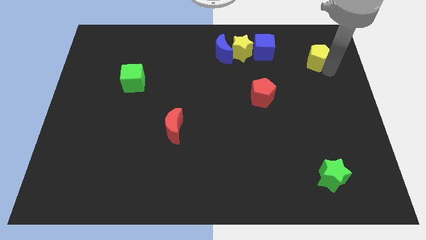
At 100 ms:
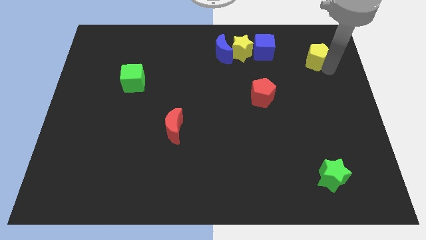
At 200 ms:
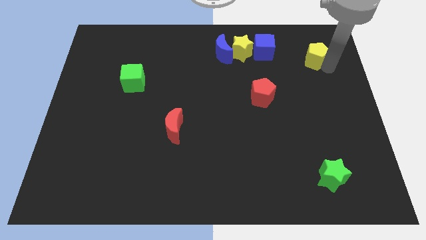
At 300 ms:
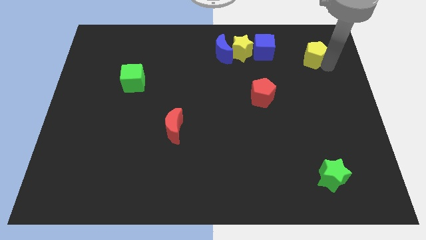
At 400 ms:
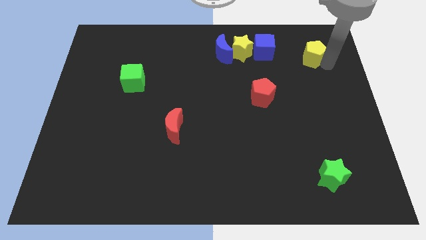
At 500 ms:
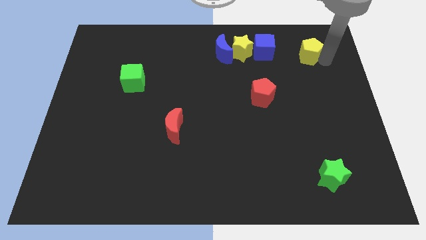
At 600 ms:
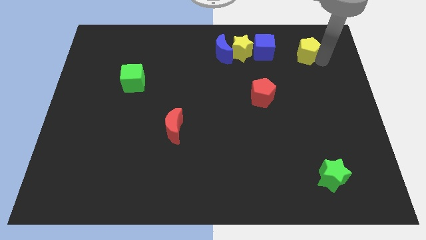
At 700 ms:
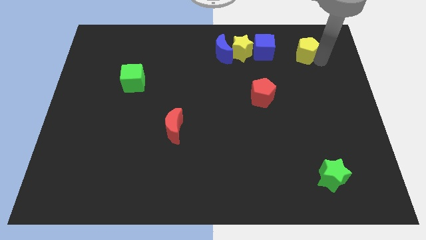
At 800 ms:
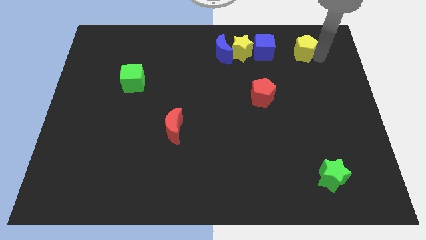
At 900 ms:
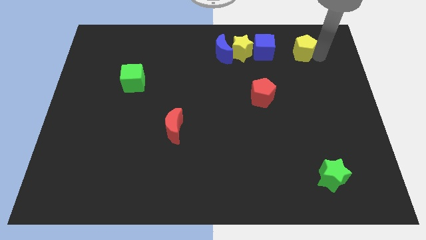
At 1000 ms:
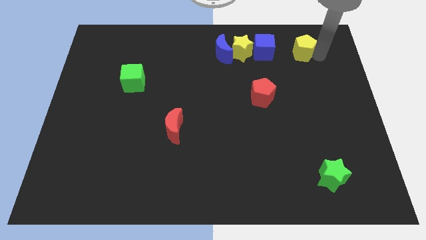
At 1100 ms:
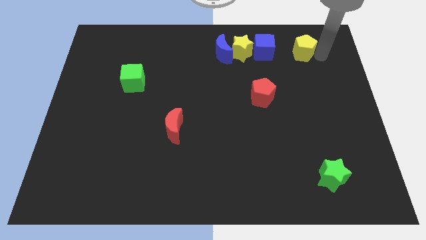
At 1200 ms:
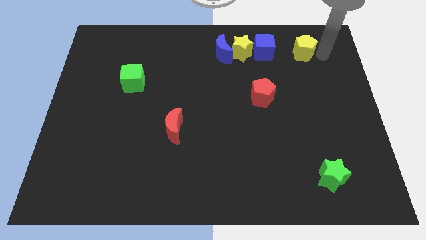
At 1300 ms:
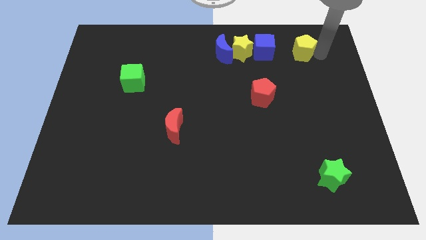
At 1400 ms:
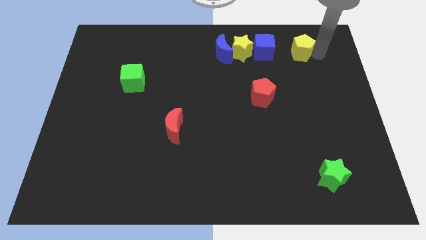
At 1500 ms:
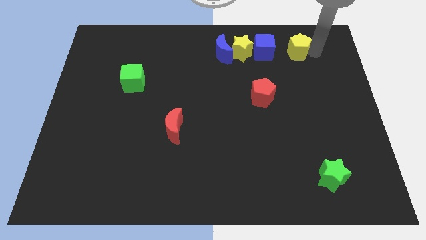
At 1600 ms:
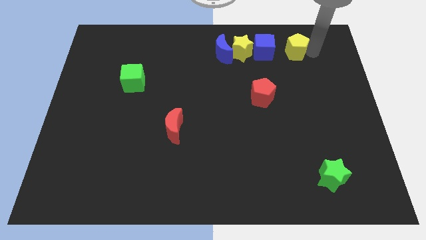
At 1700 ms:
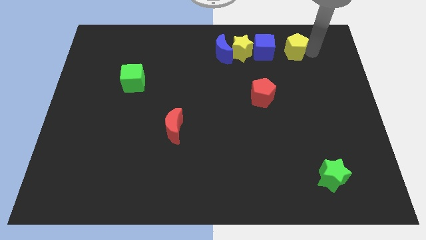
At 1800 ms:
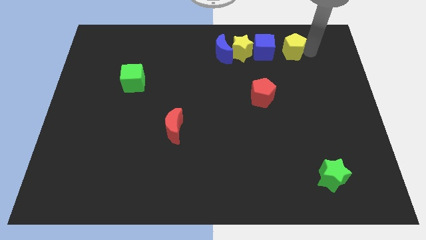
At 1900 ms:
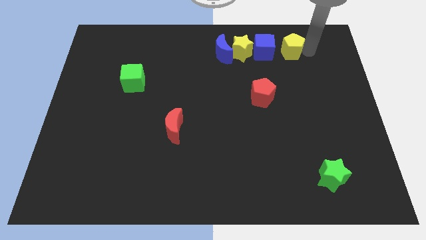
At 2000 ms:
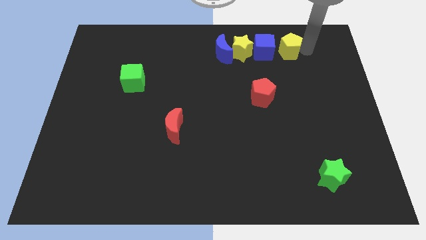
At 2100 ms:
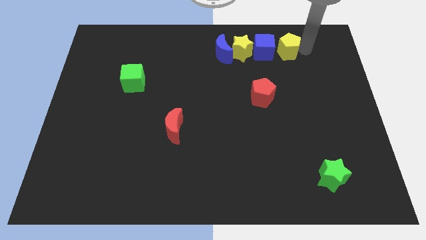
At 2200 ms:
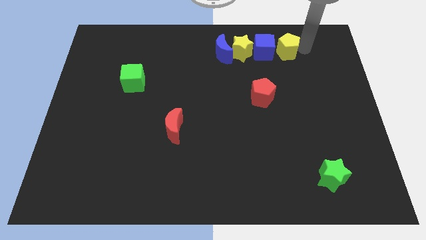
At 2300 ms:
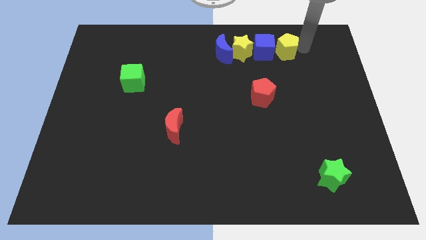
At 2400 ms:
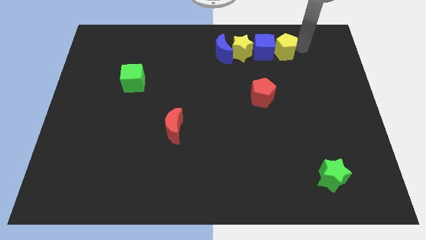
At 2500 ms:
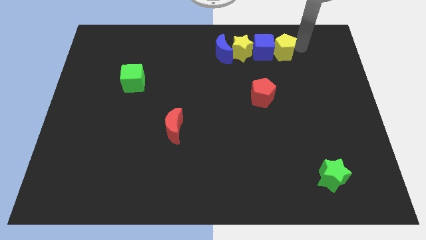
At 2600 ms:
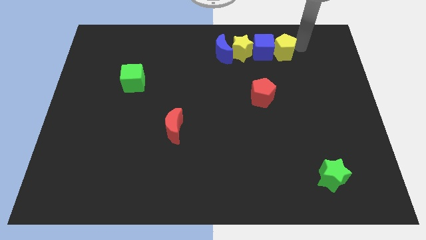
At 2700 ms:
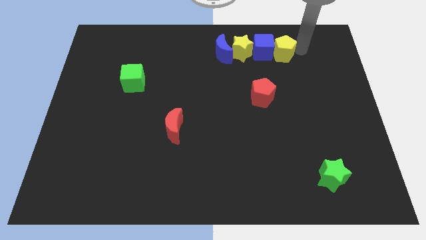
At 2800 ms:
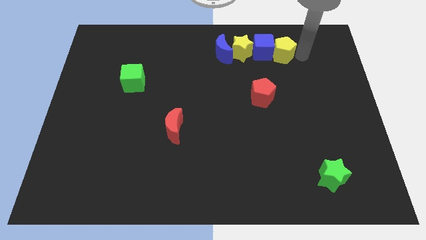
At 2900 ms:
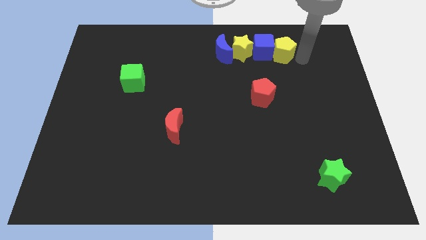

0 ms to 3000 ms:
place the yellow pentagon right to the blue cube

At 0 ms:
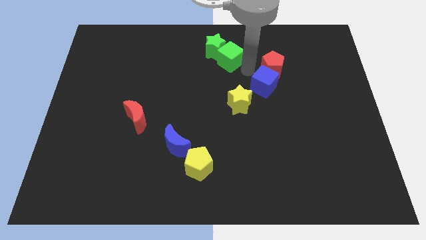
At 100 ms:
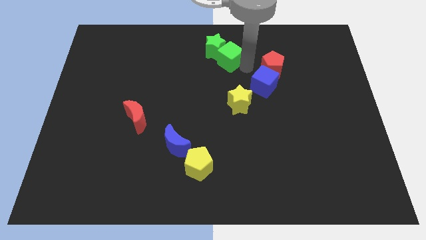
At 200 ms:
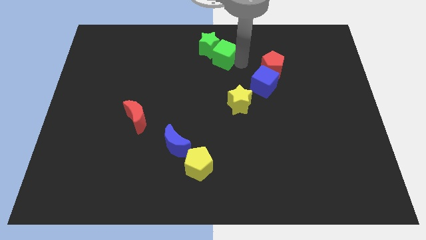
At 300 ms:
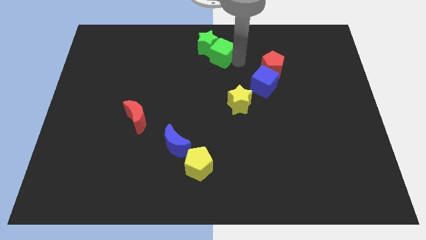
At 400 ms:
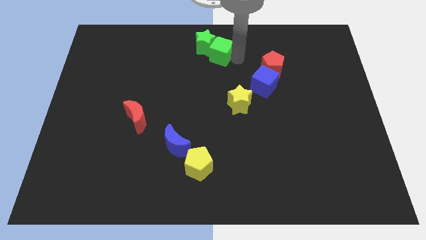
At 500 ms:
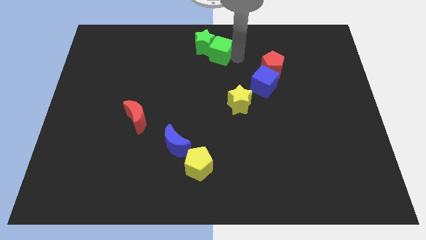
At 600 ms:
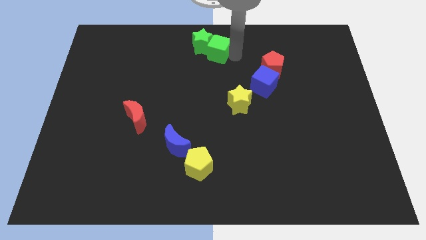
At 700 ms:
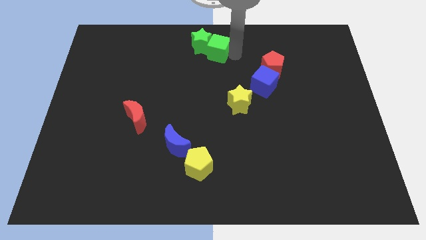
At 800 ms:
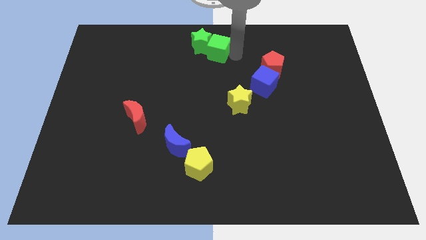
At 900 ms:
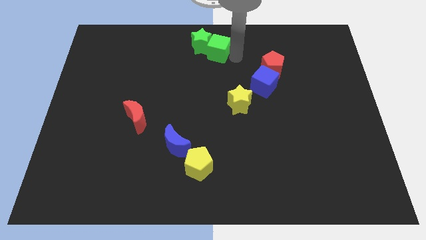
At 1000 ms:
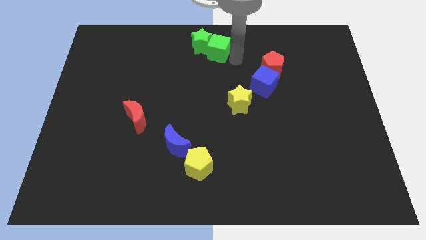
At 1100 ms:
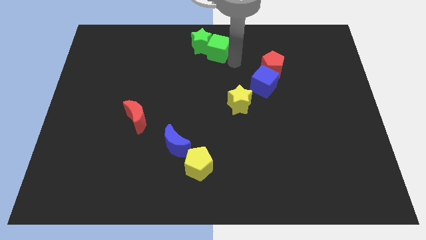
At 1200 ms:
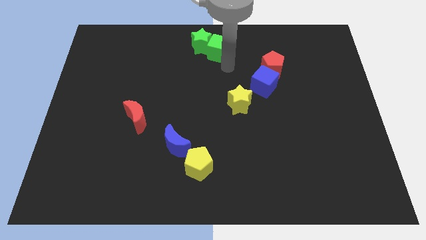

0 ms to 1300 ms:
push the green blocks towards the top center of the board

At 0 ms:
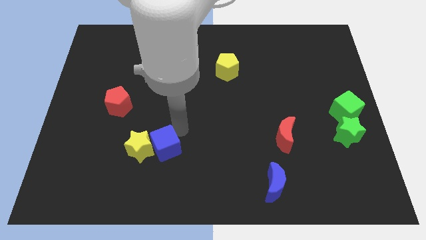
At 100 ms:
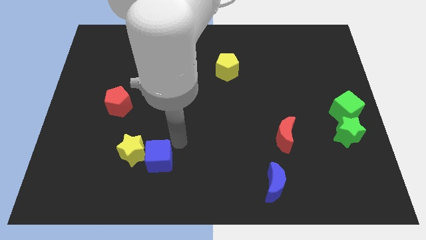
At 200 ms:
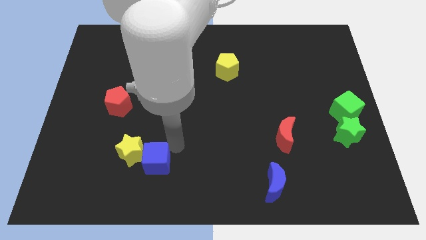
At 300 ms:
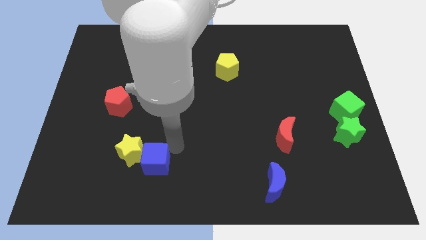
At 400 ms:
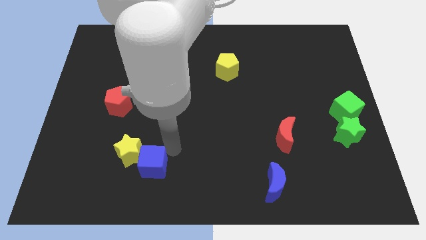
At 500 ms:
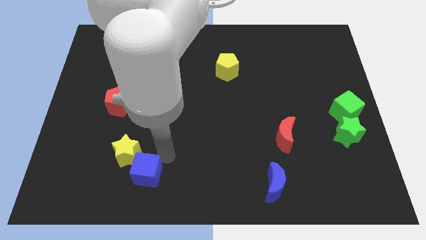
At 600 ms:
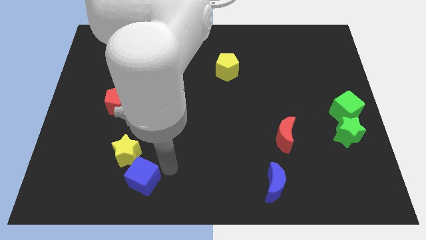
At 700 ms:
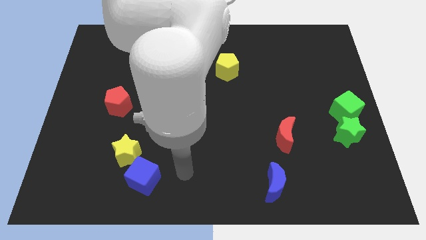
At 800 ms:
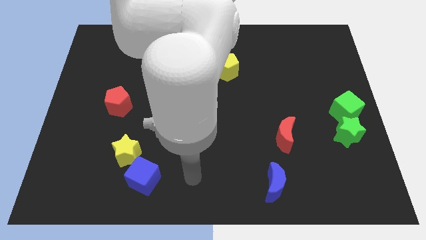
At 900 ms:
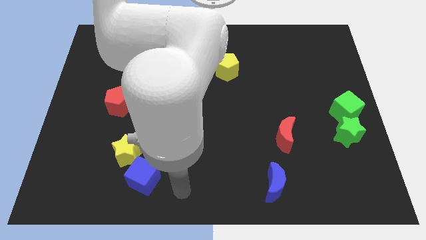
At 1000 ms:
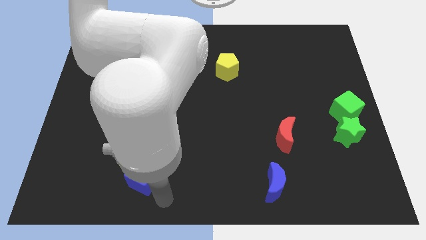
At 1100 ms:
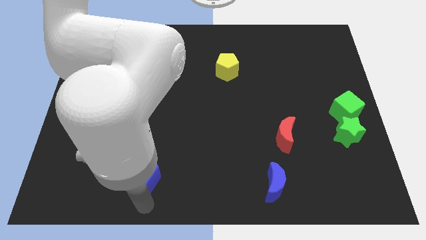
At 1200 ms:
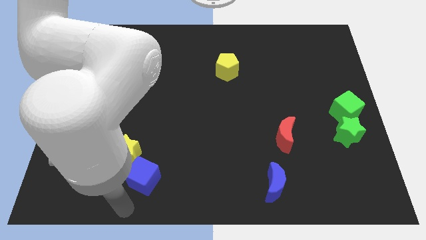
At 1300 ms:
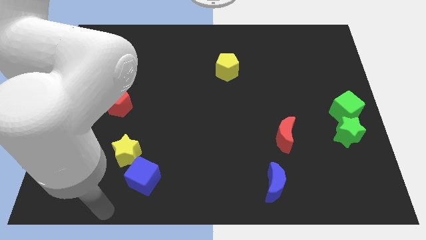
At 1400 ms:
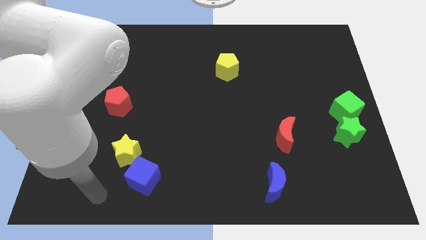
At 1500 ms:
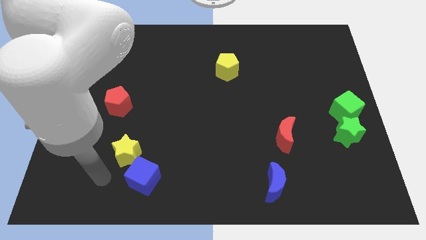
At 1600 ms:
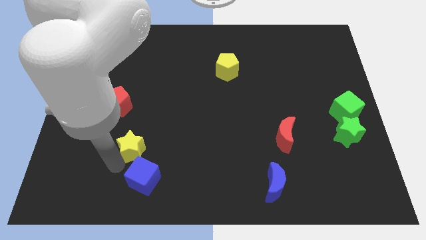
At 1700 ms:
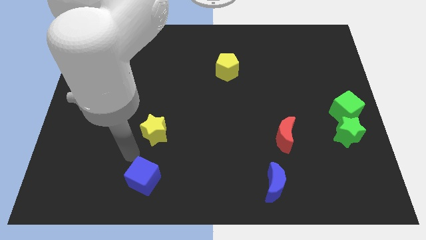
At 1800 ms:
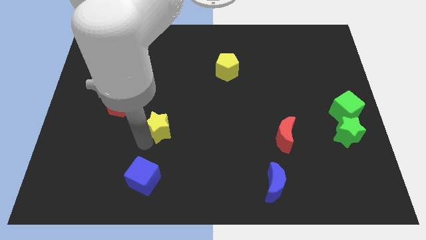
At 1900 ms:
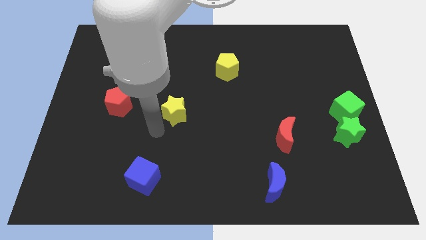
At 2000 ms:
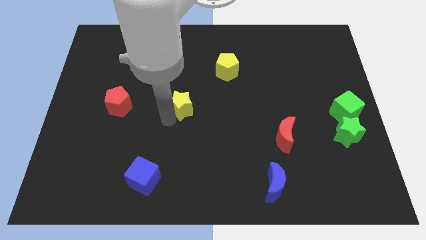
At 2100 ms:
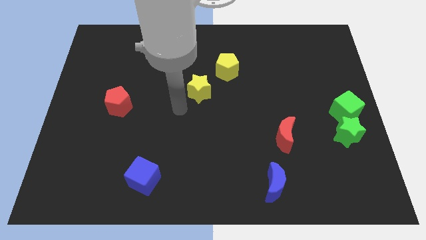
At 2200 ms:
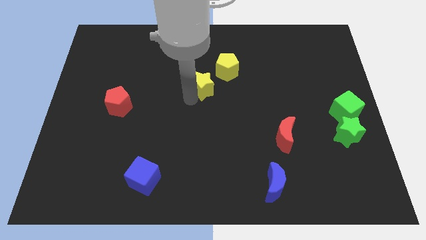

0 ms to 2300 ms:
separate yellow star from blue cube

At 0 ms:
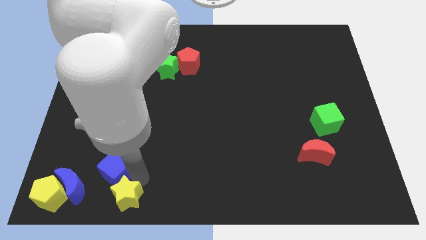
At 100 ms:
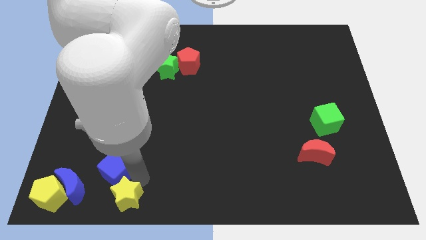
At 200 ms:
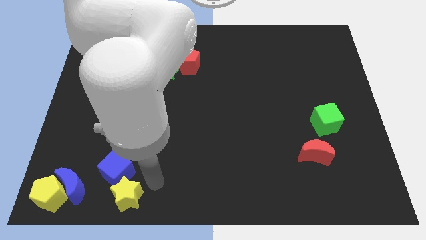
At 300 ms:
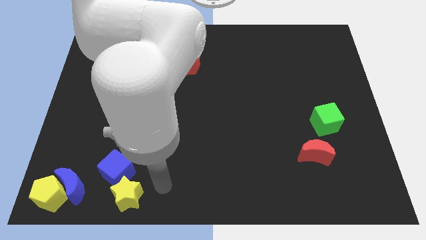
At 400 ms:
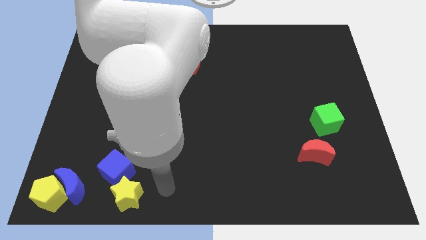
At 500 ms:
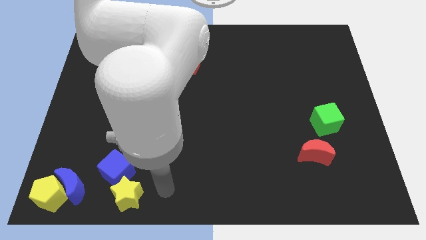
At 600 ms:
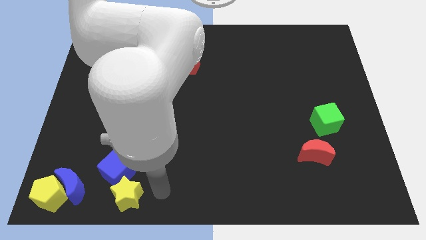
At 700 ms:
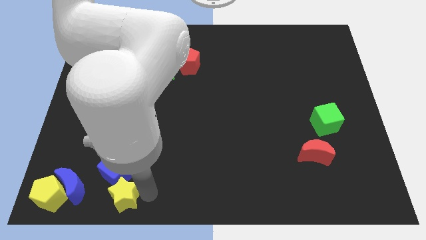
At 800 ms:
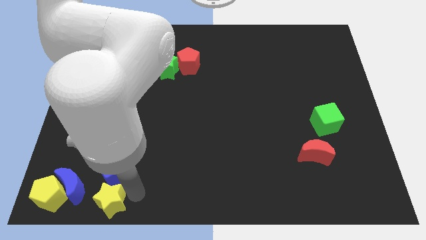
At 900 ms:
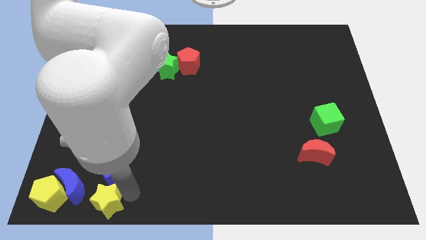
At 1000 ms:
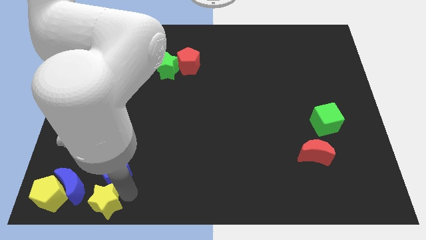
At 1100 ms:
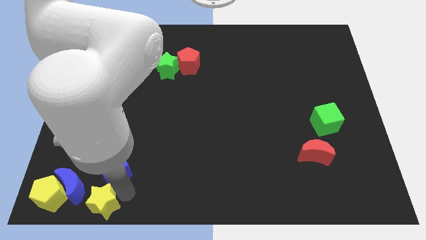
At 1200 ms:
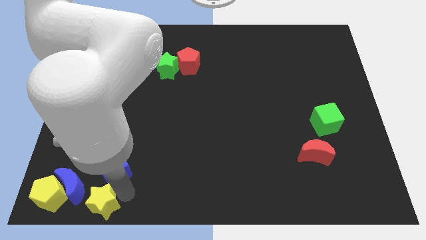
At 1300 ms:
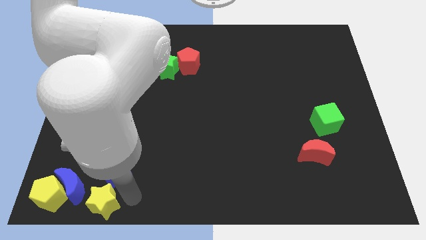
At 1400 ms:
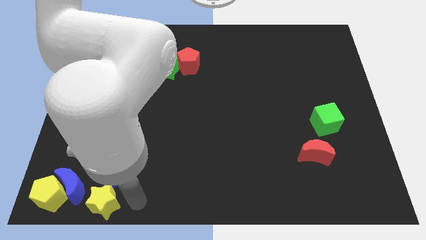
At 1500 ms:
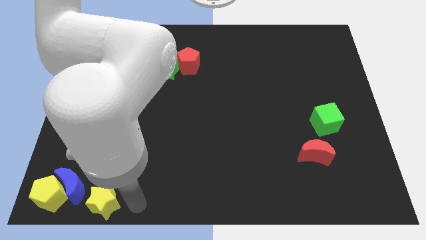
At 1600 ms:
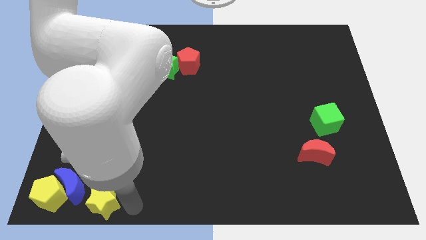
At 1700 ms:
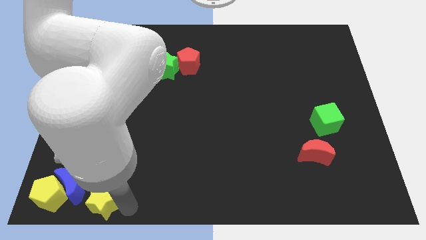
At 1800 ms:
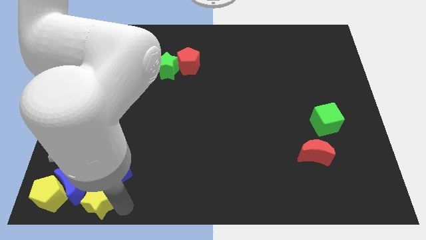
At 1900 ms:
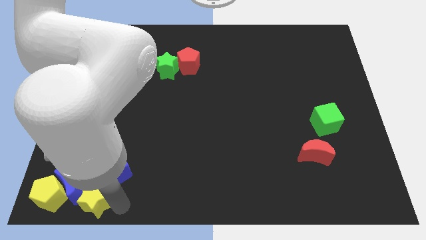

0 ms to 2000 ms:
move the yellow star diagonally right to the blue crescent

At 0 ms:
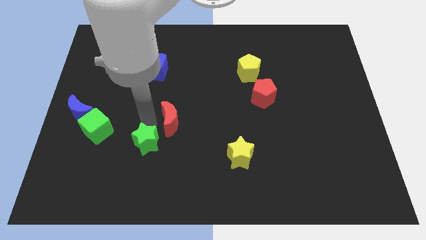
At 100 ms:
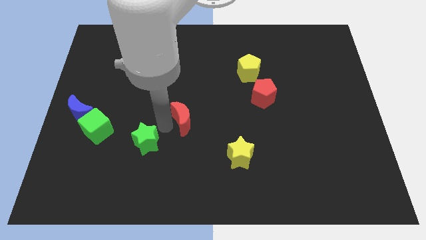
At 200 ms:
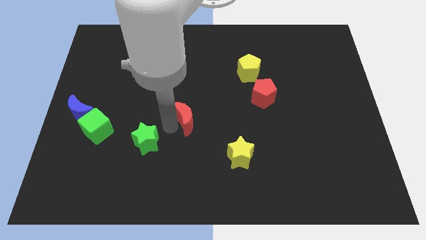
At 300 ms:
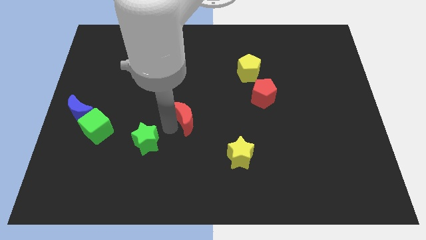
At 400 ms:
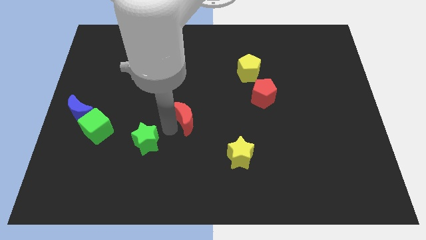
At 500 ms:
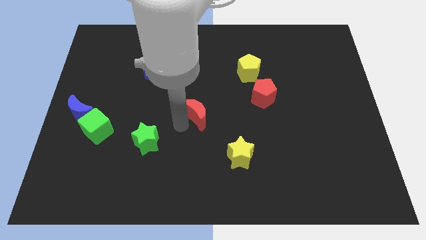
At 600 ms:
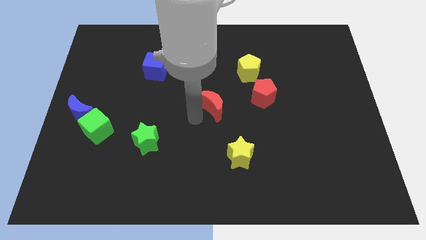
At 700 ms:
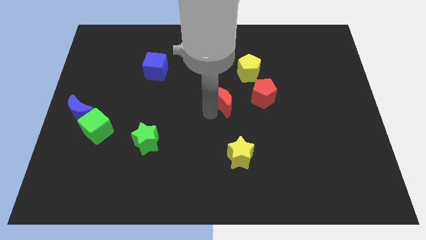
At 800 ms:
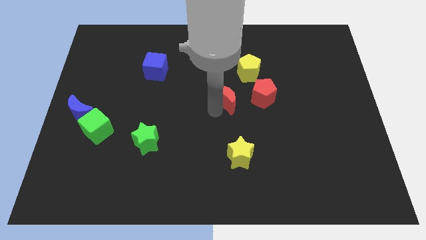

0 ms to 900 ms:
move the red crescent to the center of the board
